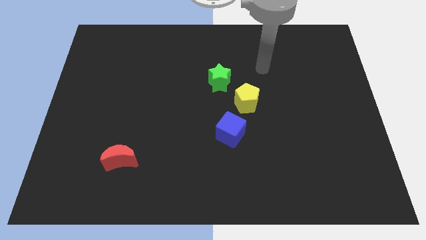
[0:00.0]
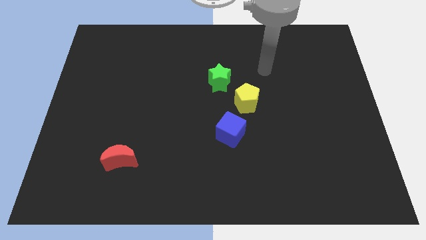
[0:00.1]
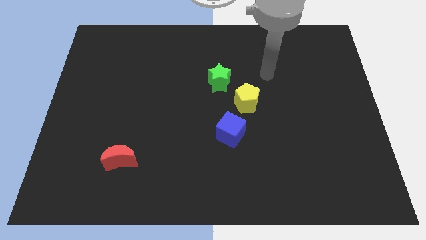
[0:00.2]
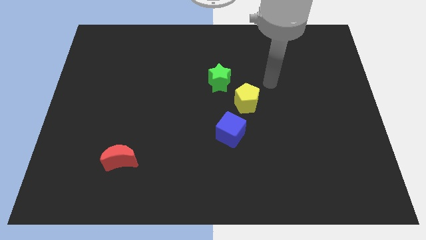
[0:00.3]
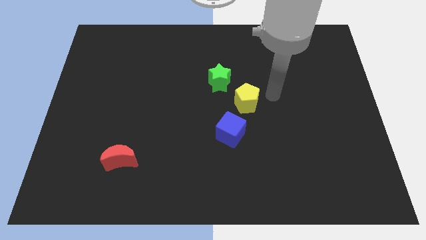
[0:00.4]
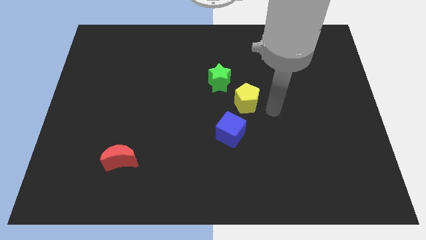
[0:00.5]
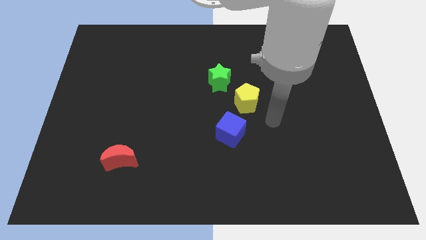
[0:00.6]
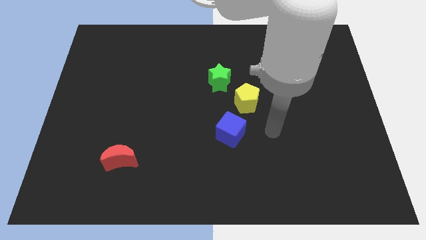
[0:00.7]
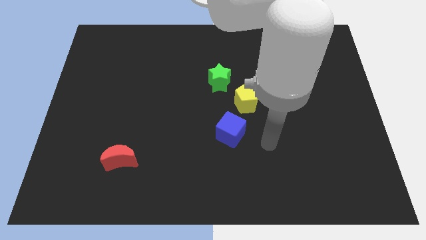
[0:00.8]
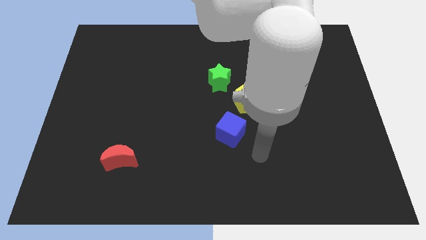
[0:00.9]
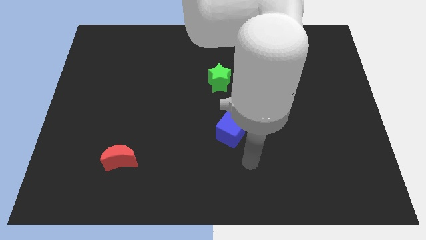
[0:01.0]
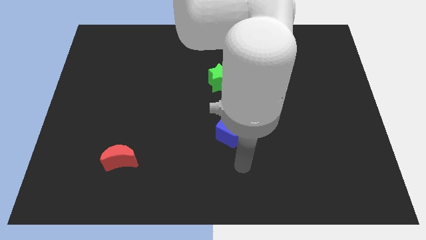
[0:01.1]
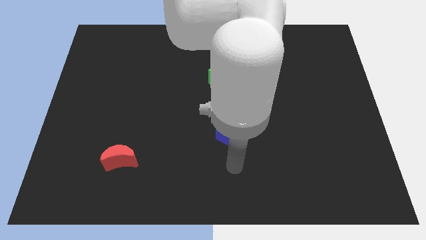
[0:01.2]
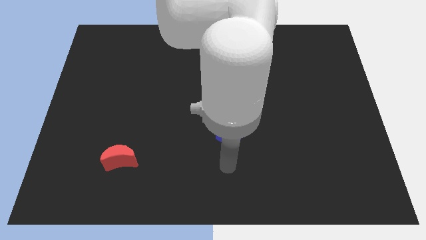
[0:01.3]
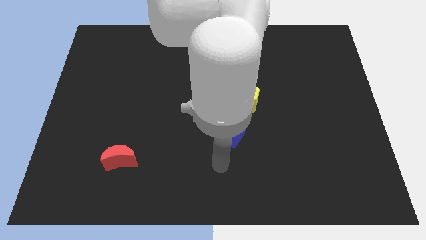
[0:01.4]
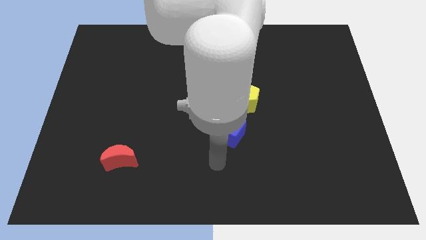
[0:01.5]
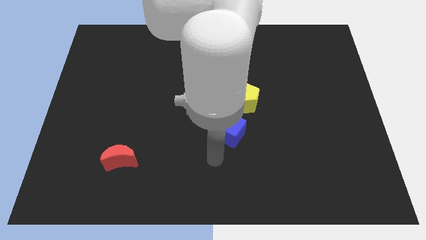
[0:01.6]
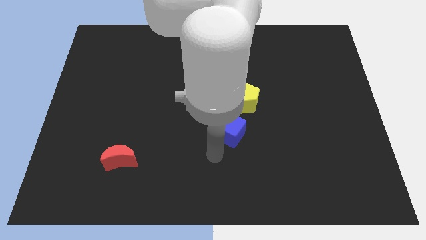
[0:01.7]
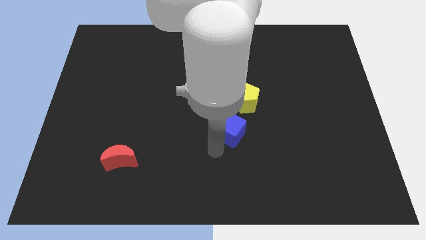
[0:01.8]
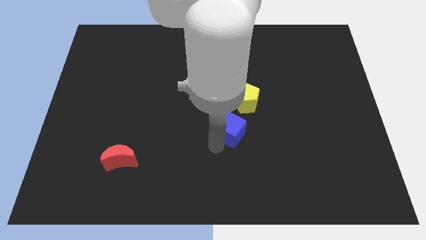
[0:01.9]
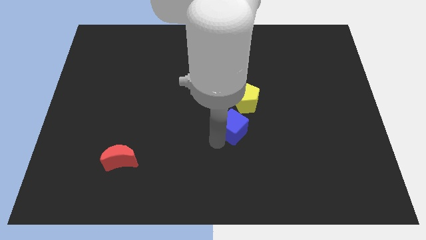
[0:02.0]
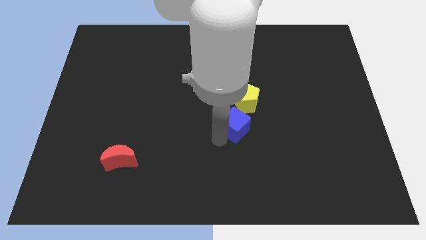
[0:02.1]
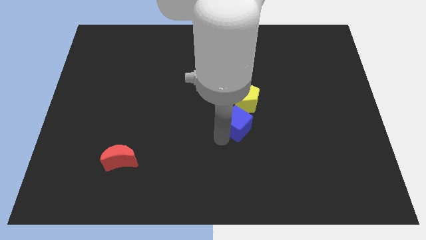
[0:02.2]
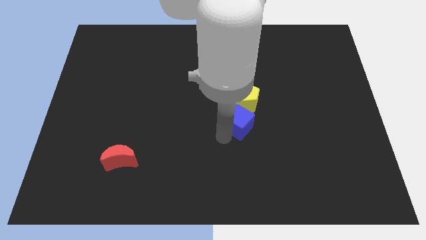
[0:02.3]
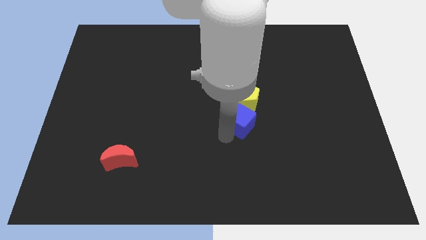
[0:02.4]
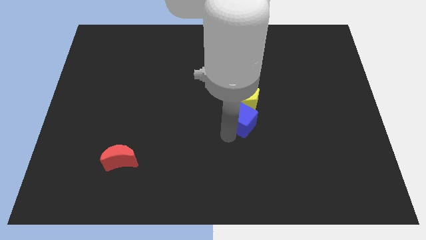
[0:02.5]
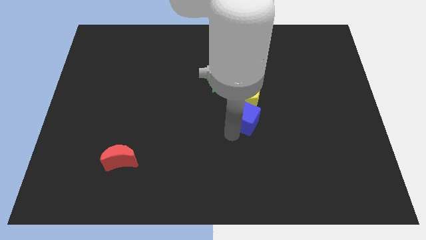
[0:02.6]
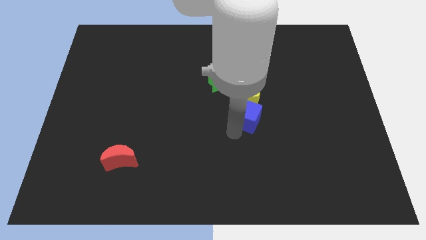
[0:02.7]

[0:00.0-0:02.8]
put the blue block next to the yellow pentagon

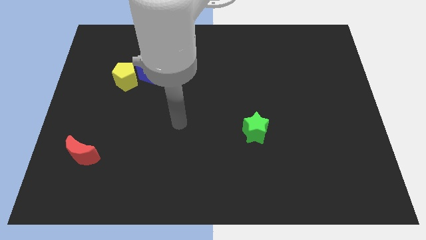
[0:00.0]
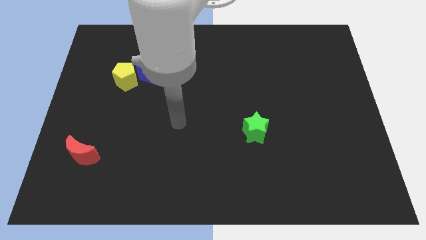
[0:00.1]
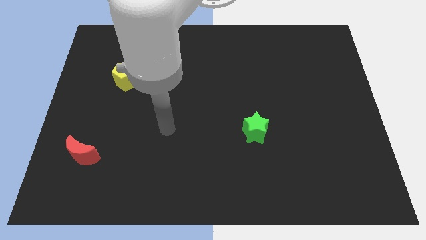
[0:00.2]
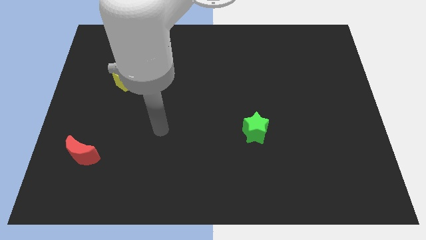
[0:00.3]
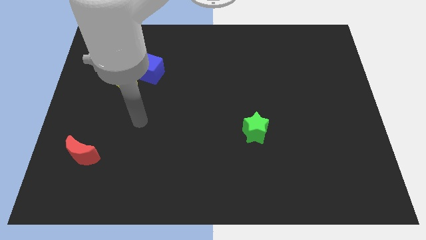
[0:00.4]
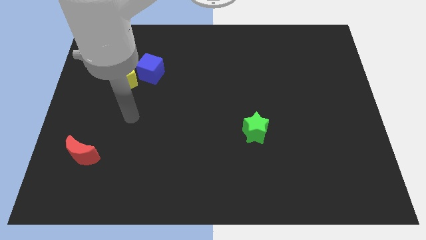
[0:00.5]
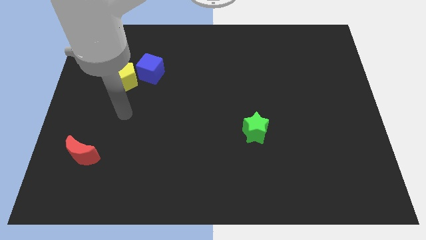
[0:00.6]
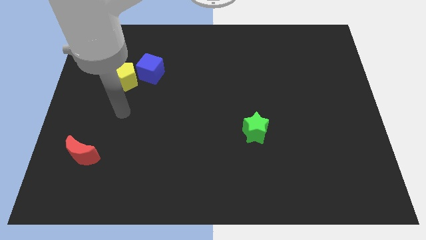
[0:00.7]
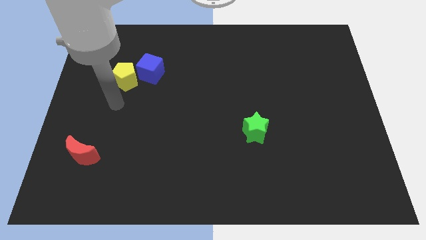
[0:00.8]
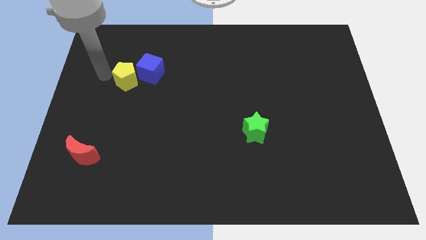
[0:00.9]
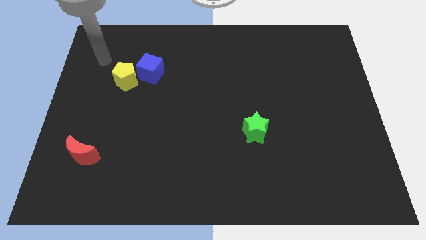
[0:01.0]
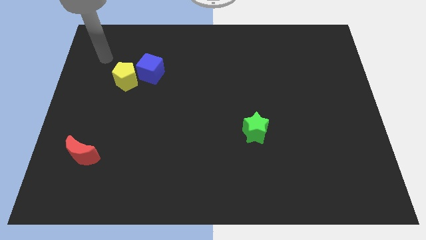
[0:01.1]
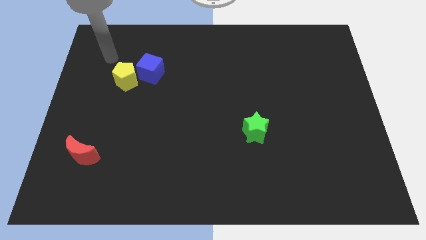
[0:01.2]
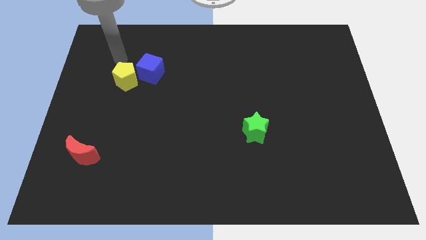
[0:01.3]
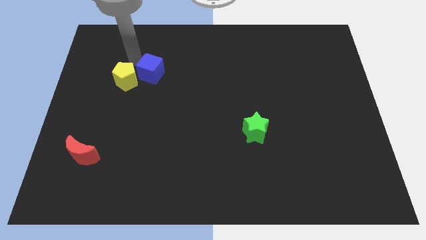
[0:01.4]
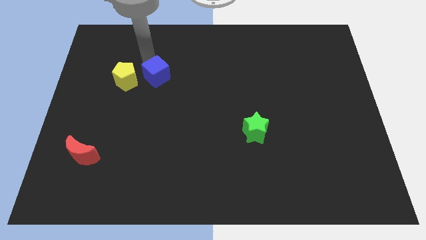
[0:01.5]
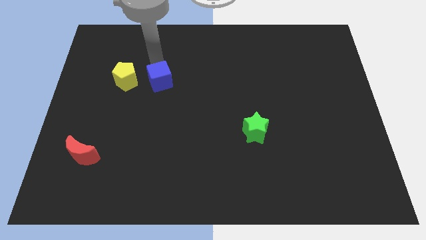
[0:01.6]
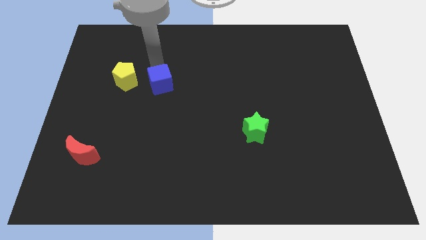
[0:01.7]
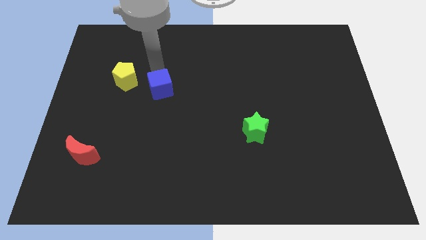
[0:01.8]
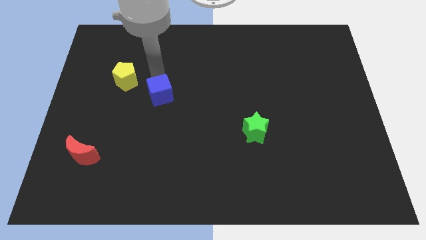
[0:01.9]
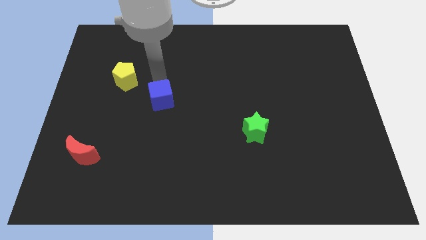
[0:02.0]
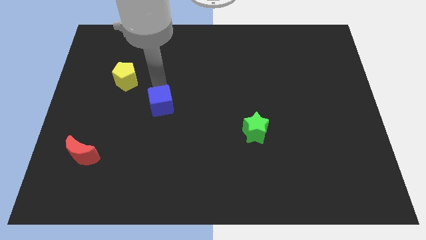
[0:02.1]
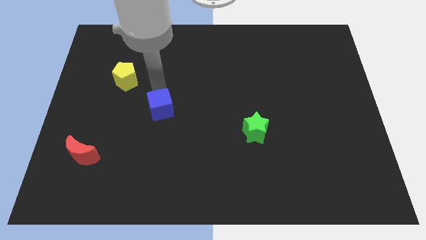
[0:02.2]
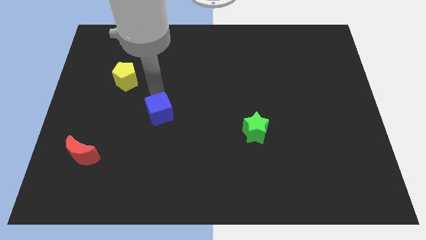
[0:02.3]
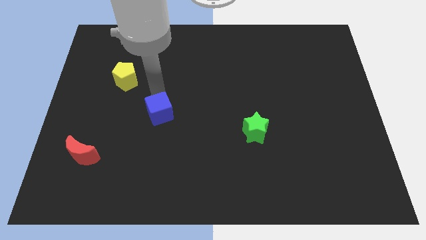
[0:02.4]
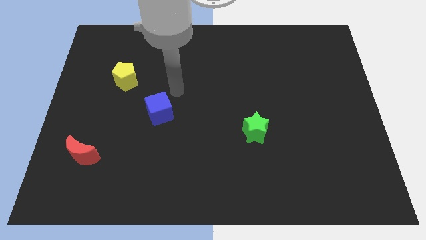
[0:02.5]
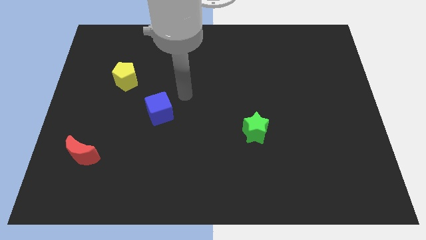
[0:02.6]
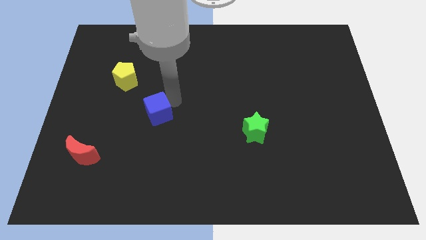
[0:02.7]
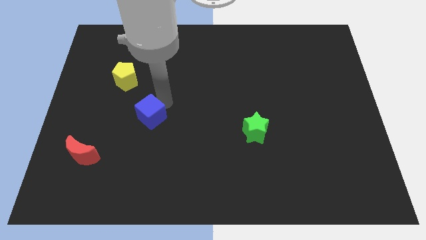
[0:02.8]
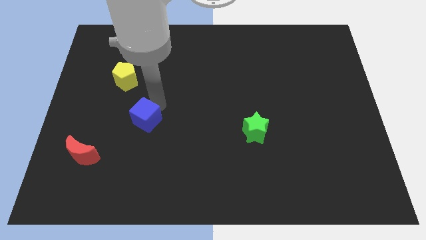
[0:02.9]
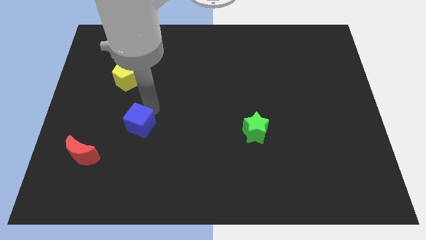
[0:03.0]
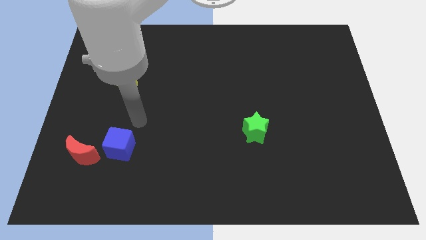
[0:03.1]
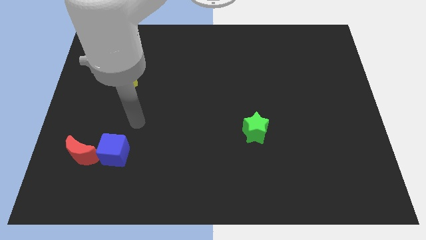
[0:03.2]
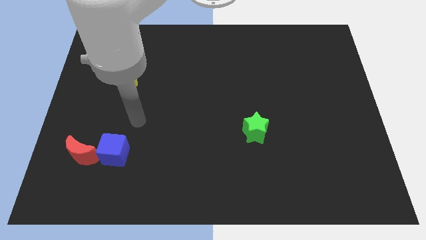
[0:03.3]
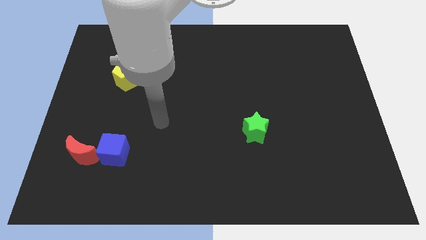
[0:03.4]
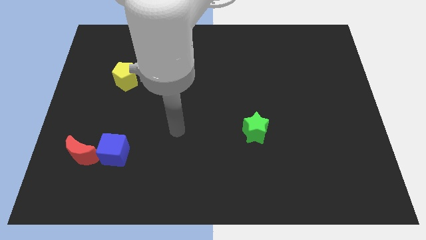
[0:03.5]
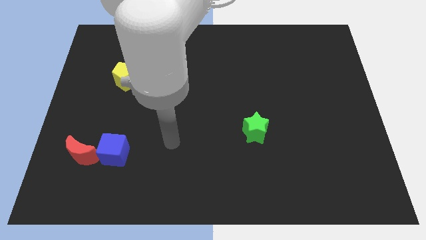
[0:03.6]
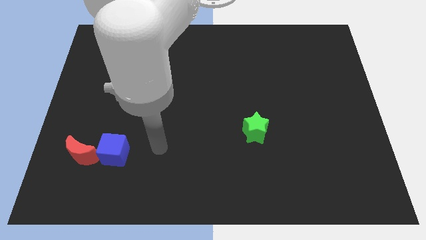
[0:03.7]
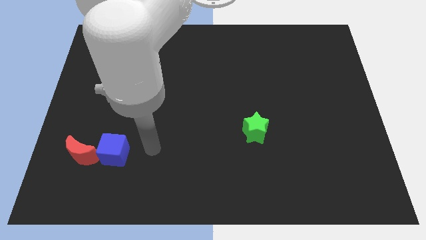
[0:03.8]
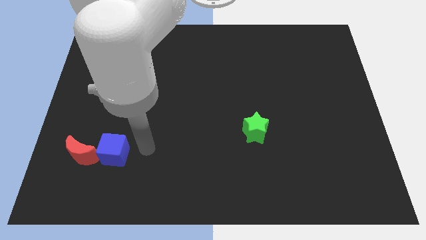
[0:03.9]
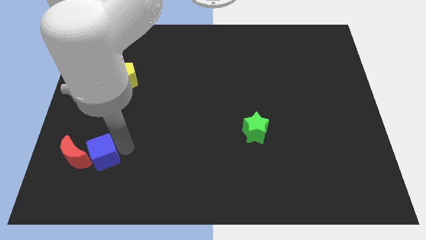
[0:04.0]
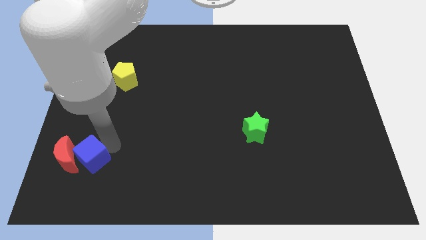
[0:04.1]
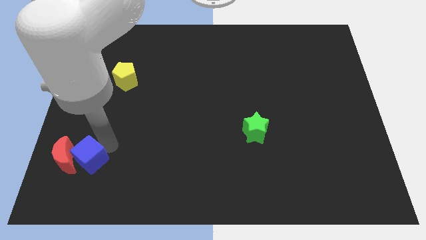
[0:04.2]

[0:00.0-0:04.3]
slide the blue block towards the moon

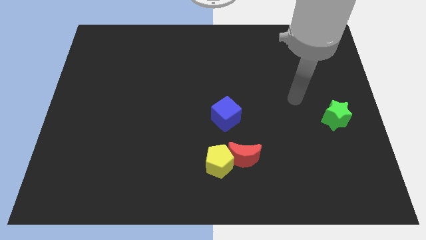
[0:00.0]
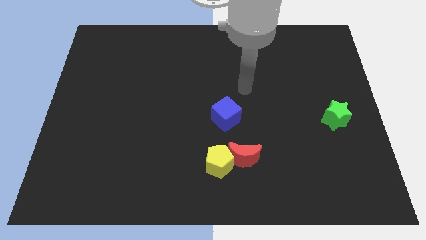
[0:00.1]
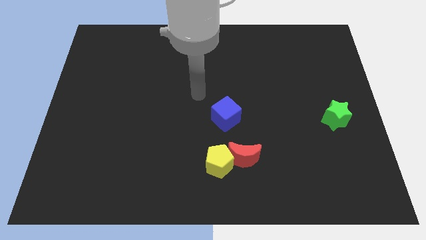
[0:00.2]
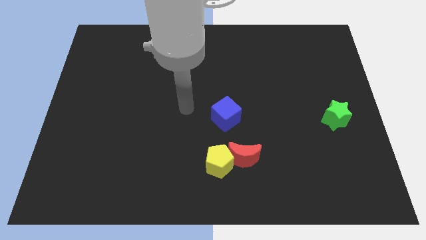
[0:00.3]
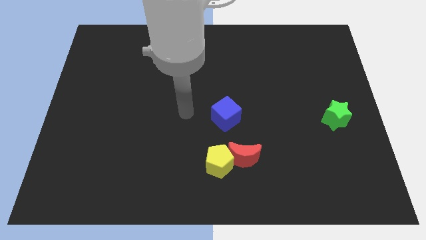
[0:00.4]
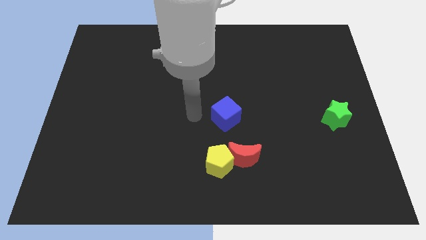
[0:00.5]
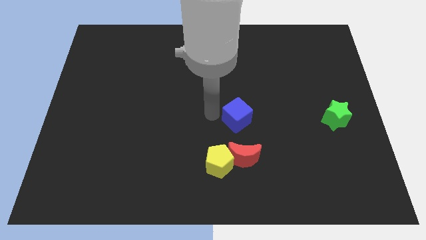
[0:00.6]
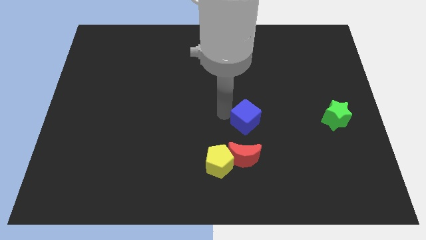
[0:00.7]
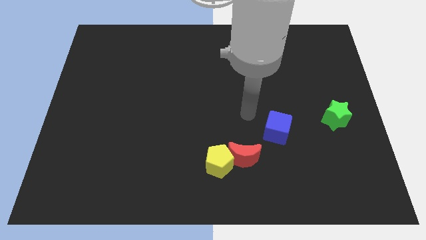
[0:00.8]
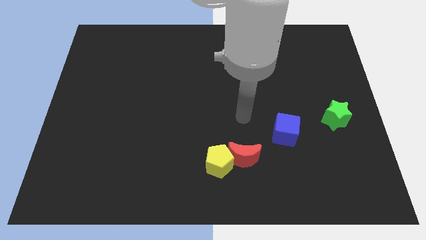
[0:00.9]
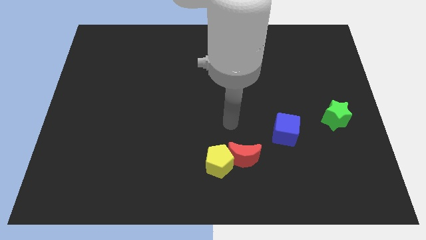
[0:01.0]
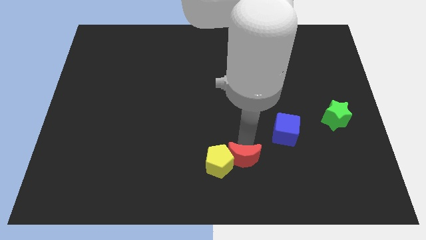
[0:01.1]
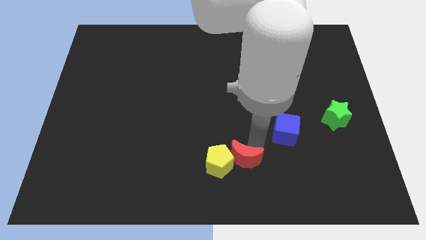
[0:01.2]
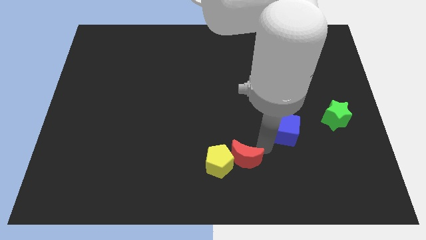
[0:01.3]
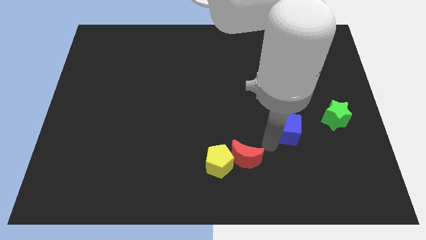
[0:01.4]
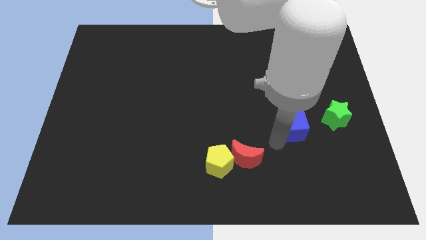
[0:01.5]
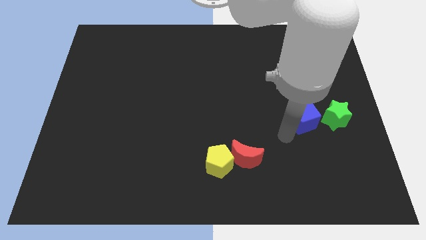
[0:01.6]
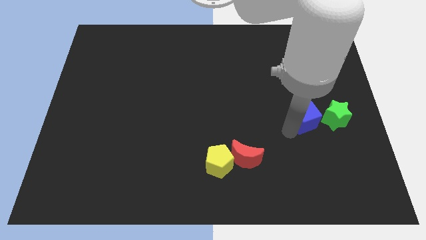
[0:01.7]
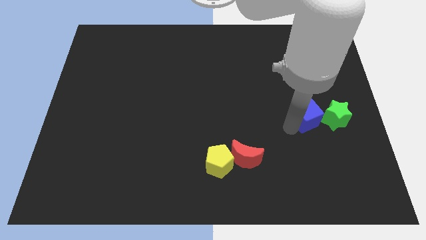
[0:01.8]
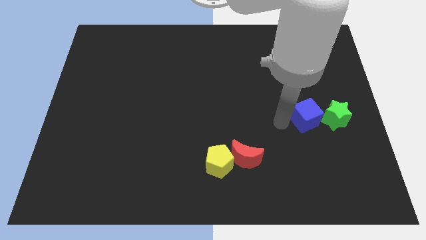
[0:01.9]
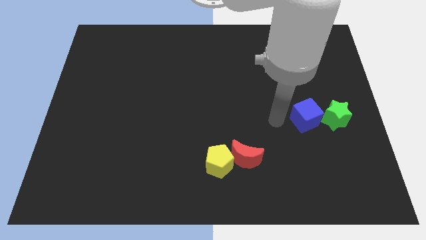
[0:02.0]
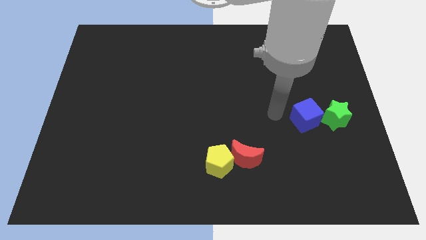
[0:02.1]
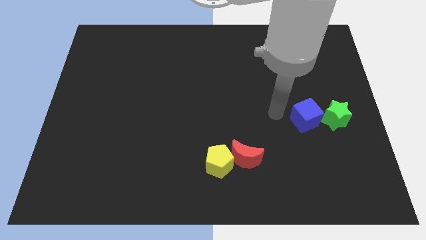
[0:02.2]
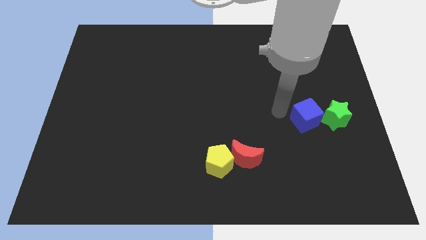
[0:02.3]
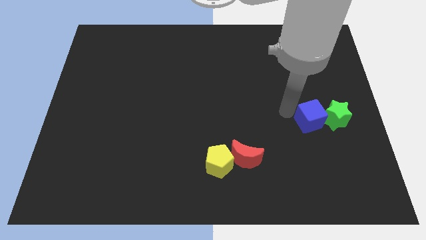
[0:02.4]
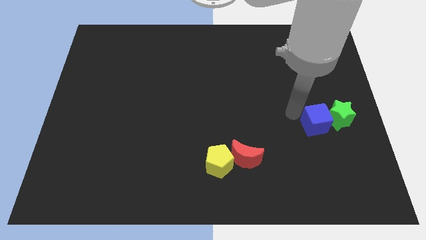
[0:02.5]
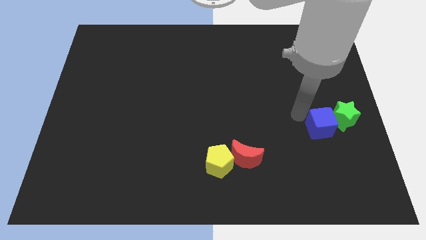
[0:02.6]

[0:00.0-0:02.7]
put the blue cube next to the green star
